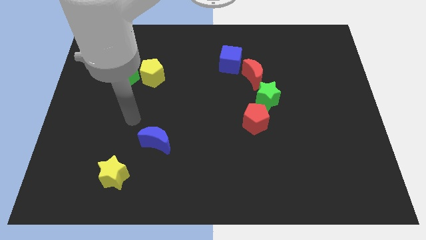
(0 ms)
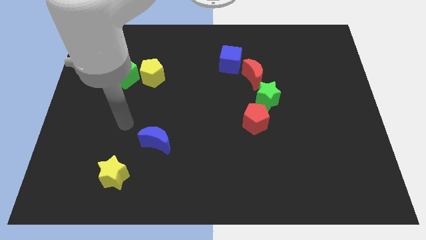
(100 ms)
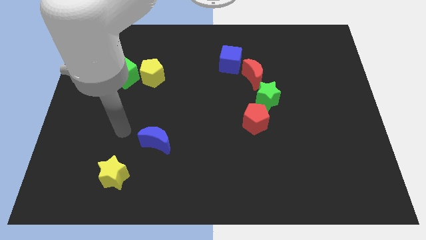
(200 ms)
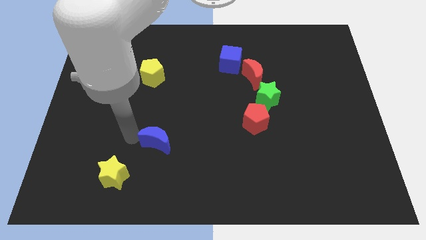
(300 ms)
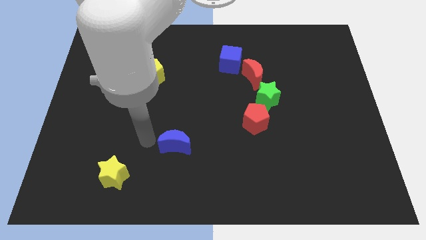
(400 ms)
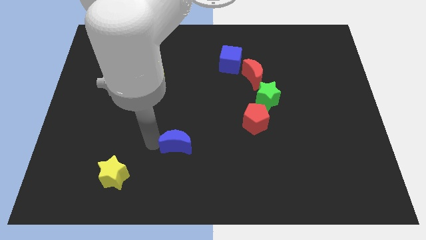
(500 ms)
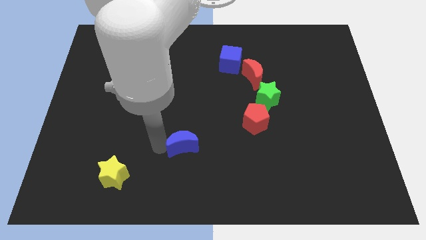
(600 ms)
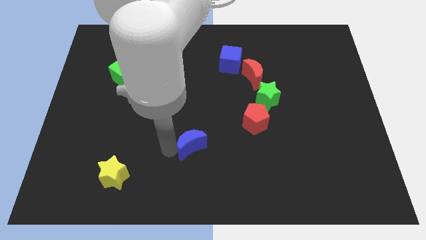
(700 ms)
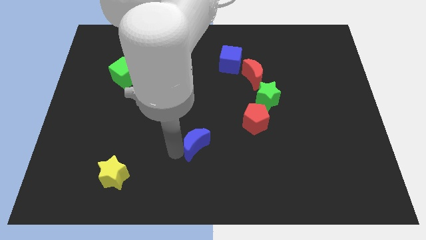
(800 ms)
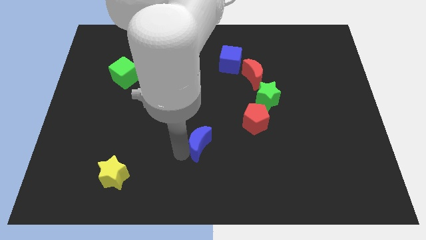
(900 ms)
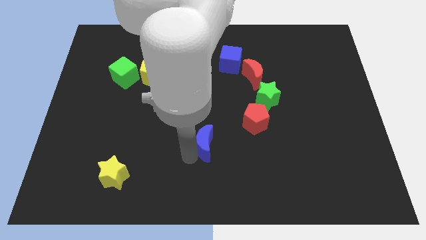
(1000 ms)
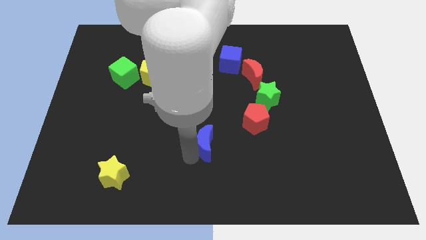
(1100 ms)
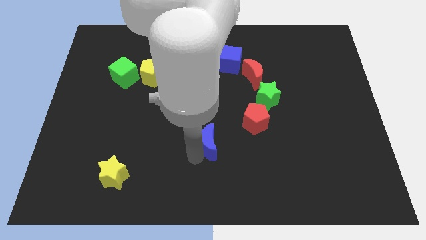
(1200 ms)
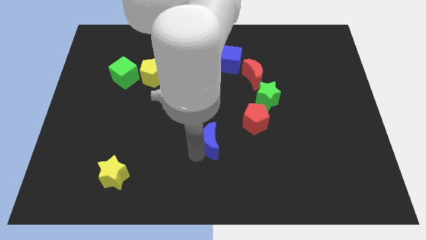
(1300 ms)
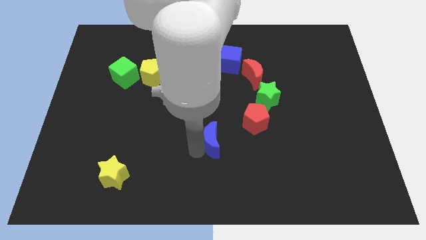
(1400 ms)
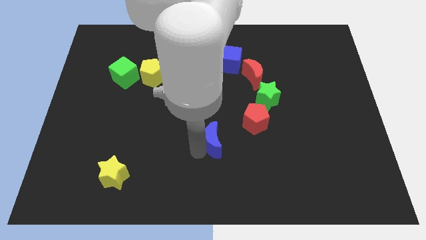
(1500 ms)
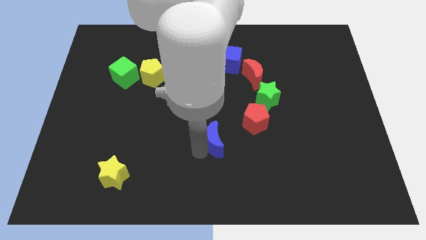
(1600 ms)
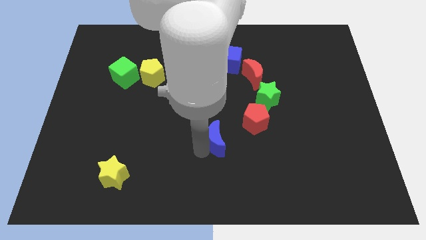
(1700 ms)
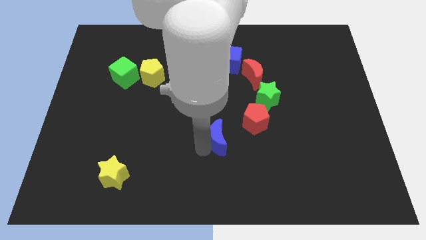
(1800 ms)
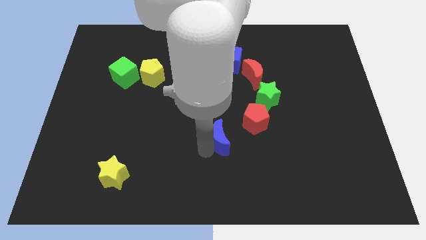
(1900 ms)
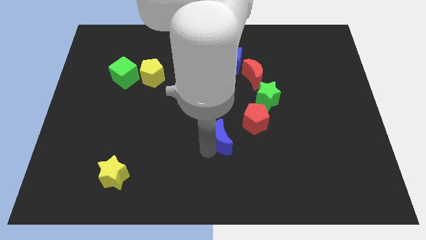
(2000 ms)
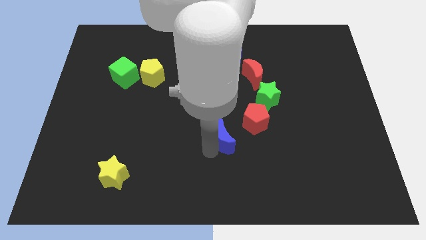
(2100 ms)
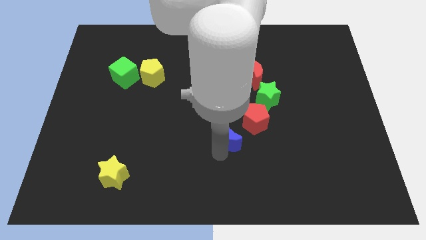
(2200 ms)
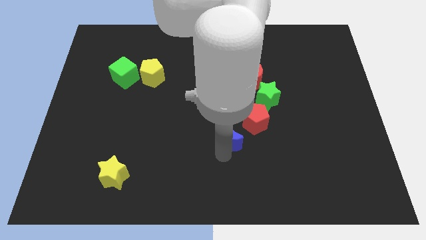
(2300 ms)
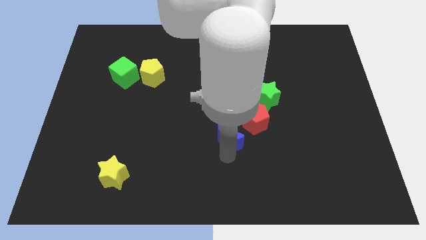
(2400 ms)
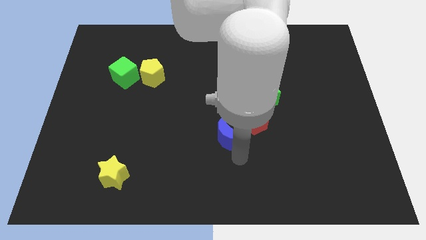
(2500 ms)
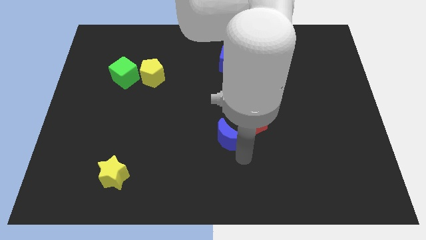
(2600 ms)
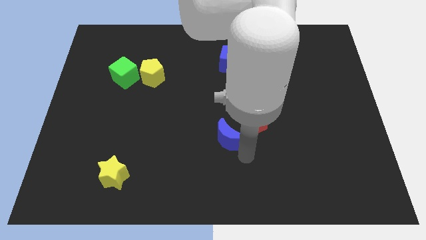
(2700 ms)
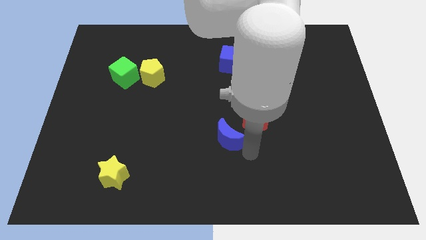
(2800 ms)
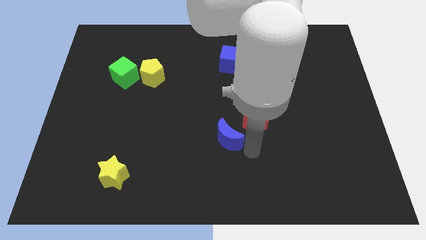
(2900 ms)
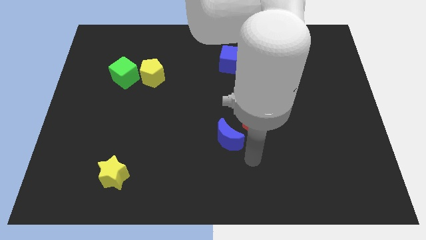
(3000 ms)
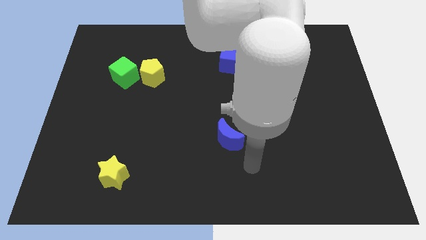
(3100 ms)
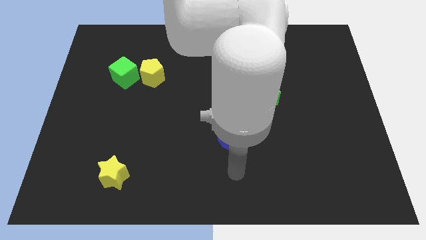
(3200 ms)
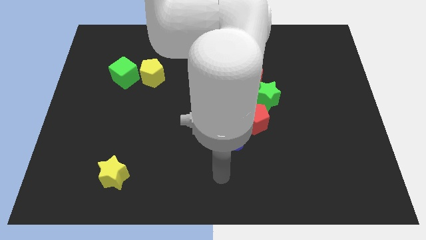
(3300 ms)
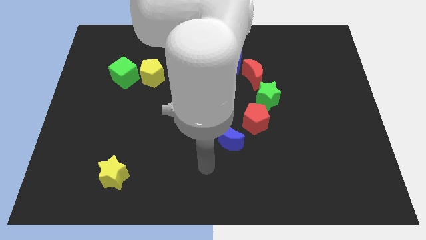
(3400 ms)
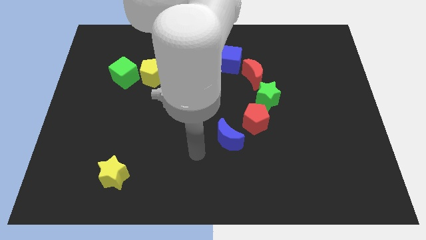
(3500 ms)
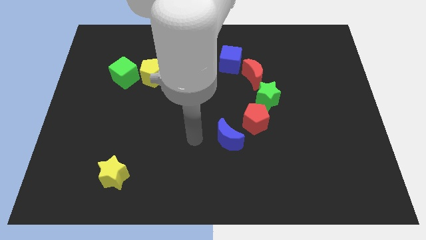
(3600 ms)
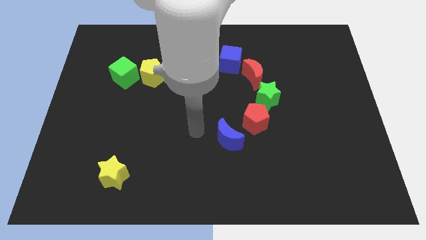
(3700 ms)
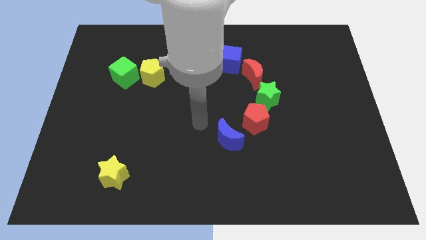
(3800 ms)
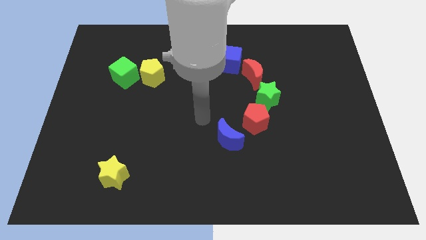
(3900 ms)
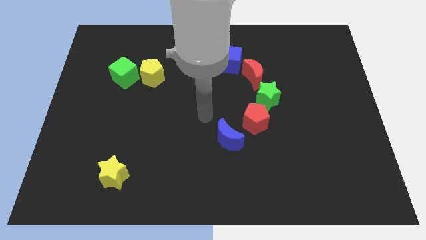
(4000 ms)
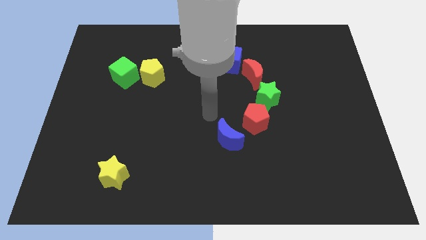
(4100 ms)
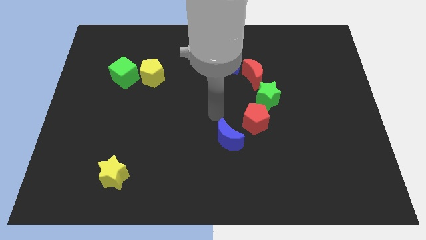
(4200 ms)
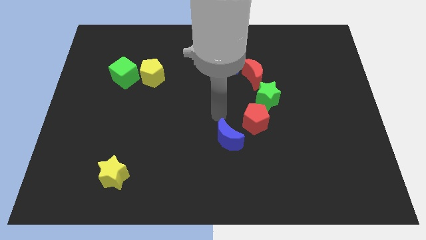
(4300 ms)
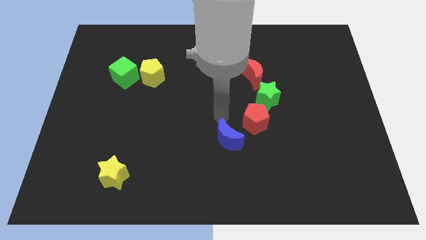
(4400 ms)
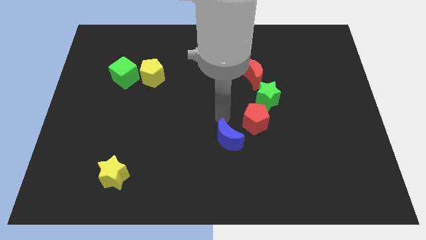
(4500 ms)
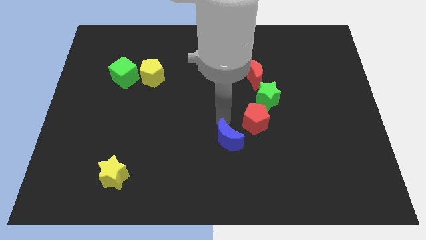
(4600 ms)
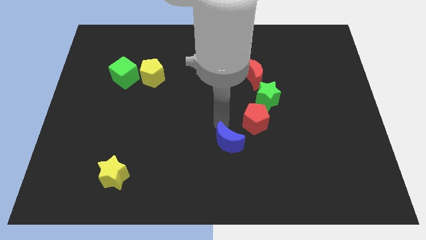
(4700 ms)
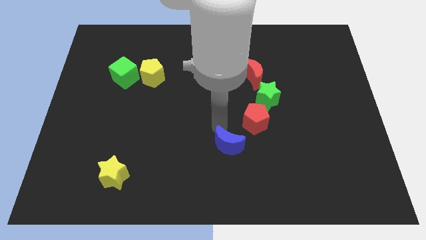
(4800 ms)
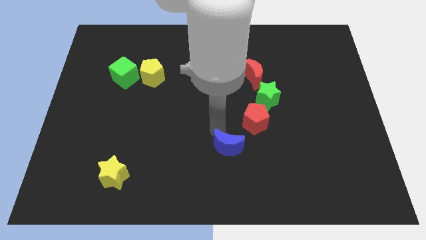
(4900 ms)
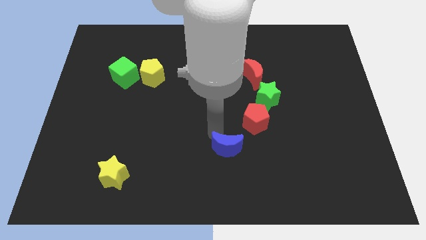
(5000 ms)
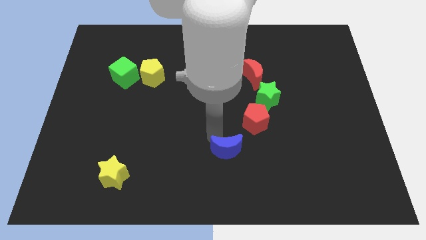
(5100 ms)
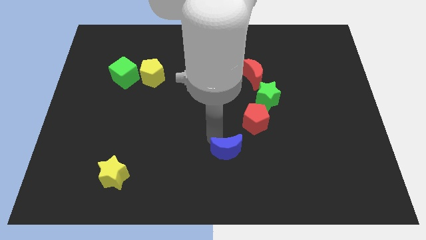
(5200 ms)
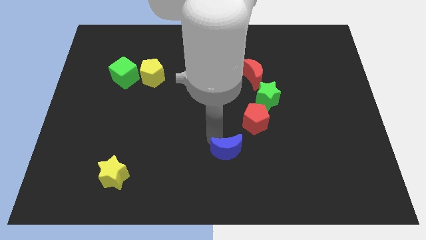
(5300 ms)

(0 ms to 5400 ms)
move the blue moon to the bottom left side of the red pentagon

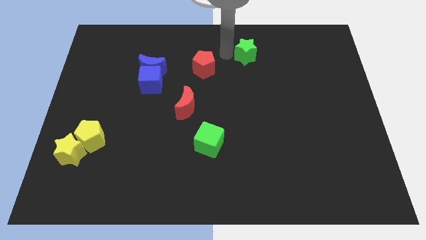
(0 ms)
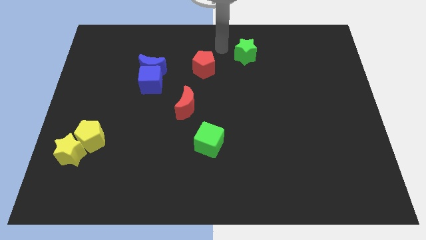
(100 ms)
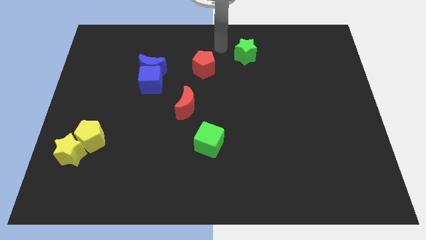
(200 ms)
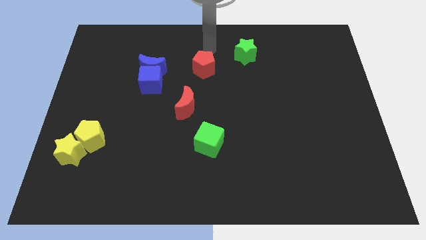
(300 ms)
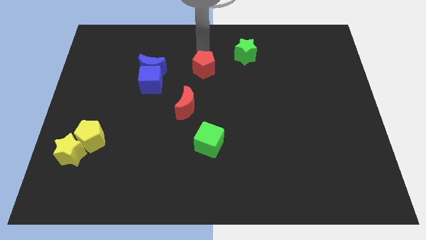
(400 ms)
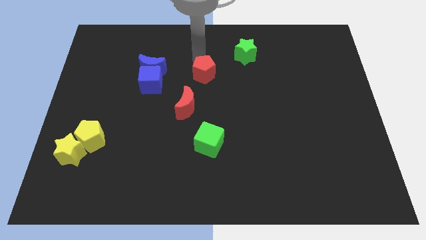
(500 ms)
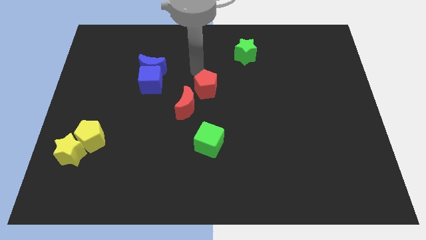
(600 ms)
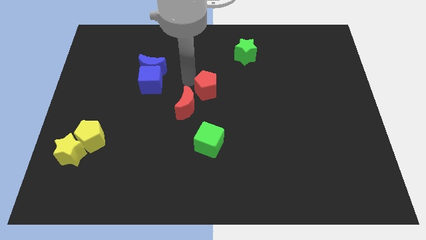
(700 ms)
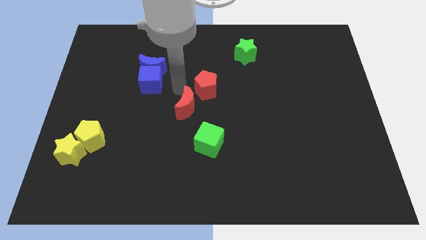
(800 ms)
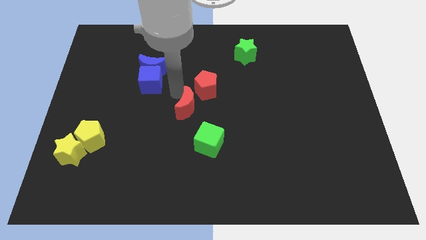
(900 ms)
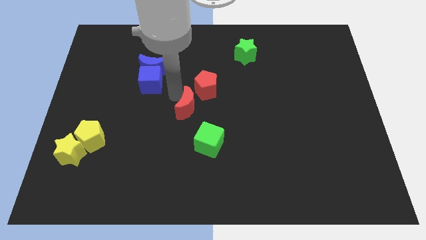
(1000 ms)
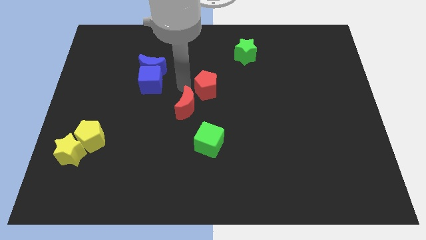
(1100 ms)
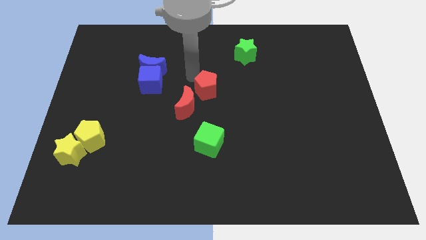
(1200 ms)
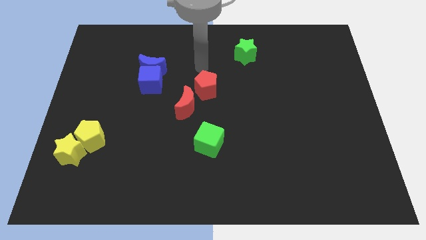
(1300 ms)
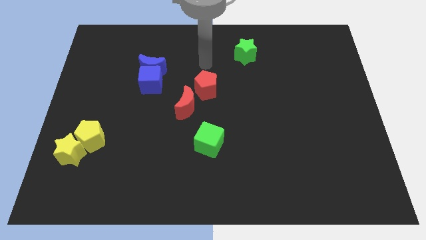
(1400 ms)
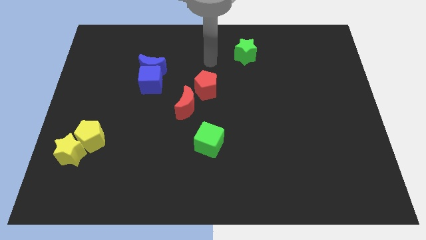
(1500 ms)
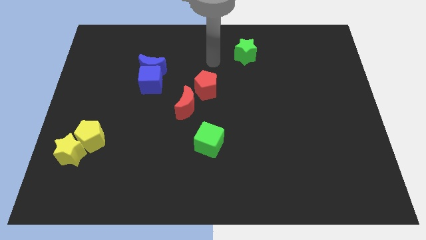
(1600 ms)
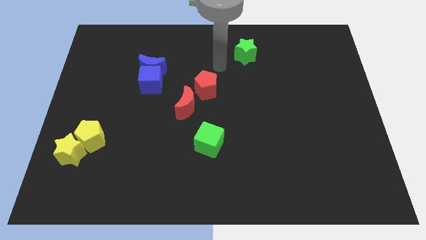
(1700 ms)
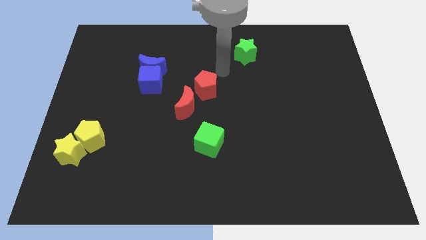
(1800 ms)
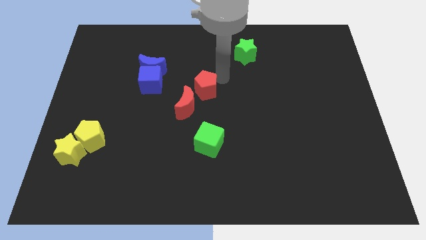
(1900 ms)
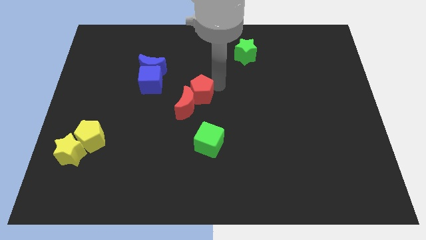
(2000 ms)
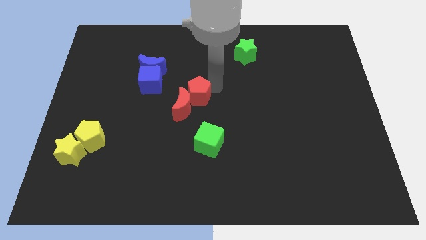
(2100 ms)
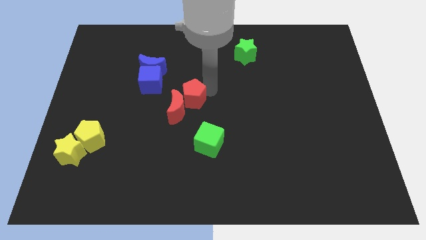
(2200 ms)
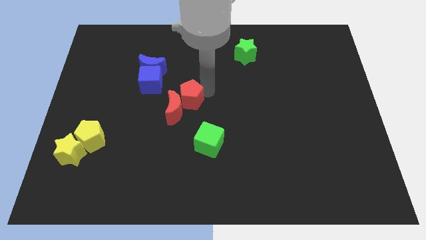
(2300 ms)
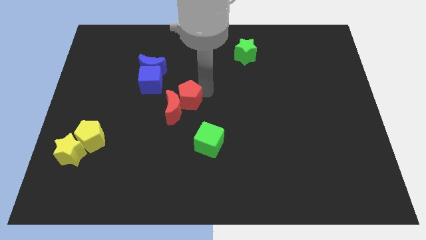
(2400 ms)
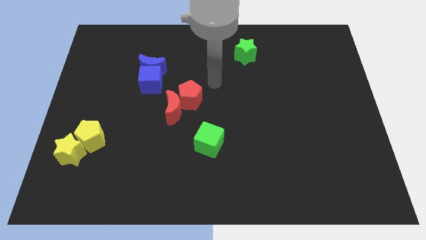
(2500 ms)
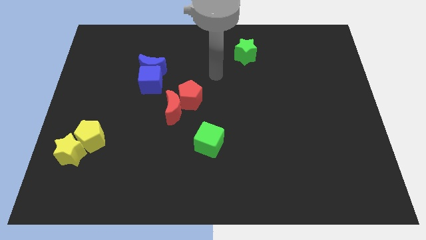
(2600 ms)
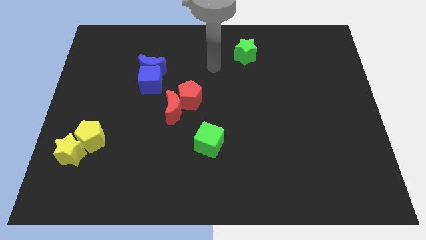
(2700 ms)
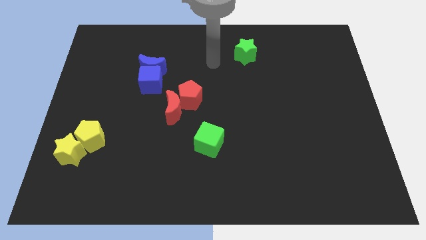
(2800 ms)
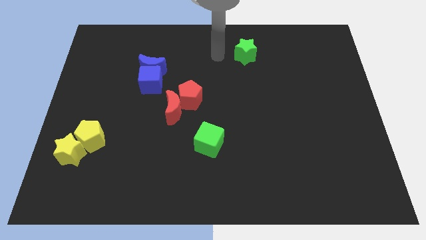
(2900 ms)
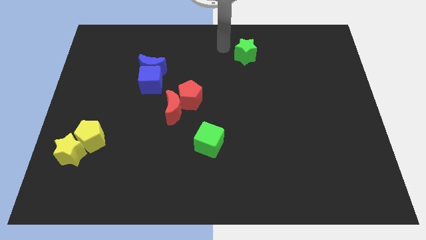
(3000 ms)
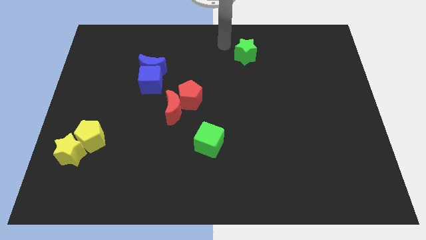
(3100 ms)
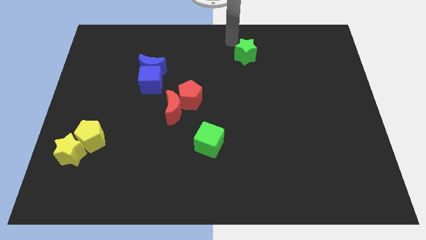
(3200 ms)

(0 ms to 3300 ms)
move the red pentagon into the red crescent

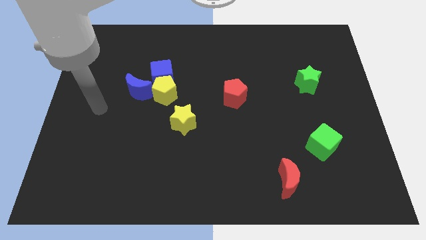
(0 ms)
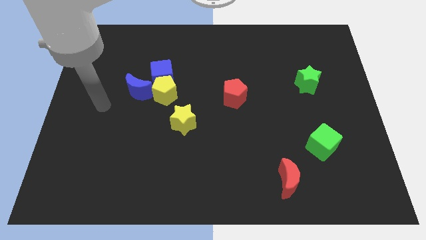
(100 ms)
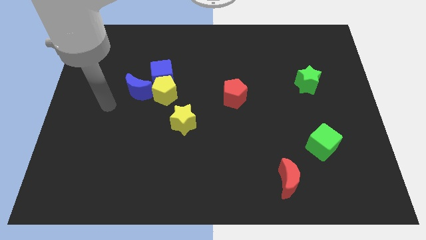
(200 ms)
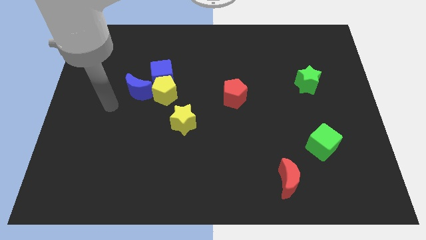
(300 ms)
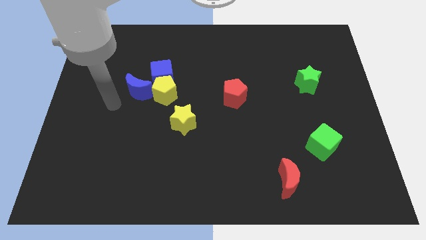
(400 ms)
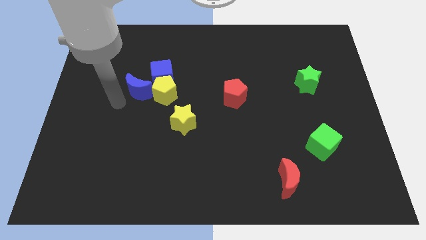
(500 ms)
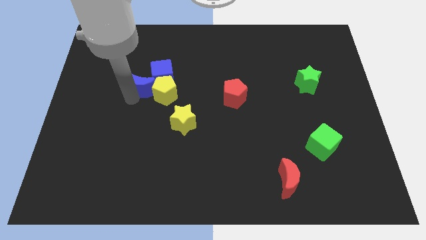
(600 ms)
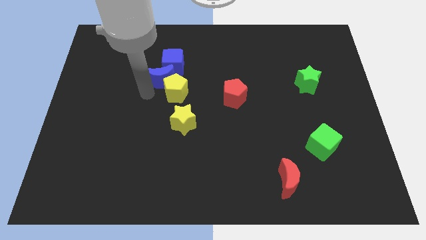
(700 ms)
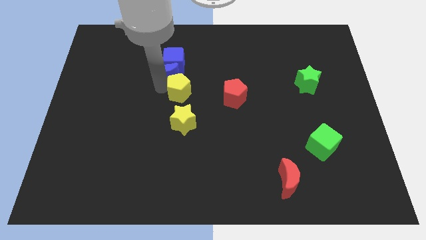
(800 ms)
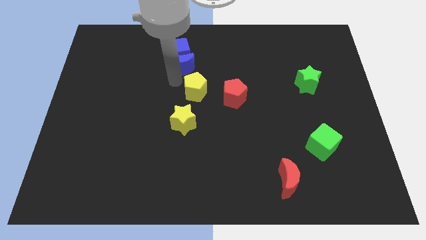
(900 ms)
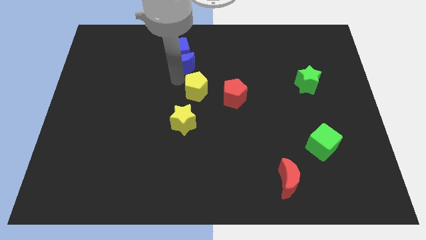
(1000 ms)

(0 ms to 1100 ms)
push the blue crescent below the blue cube
